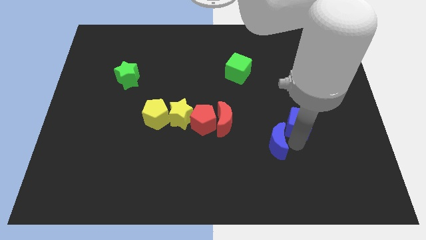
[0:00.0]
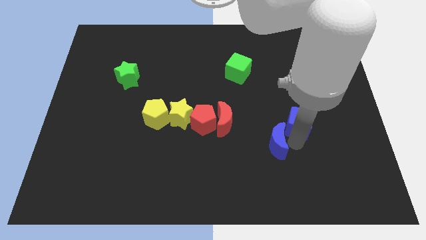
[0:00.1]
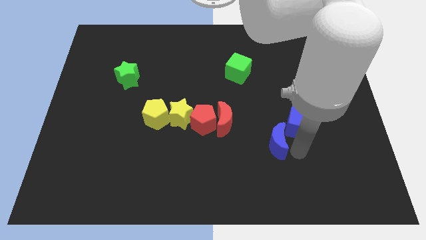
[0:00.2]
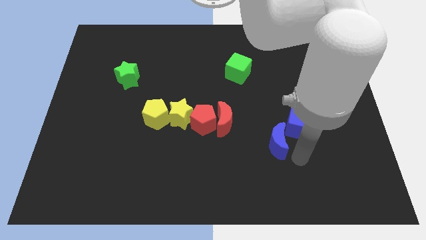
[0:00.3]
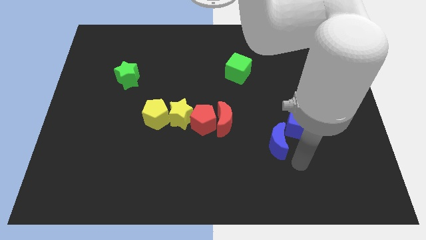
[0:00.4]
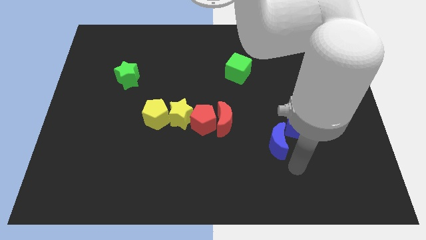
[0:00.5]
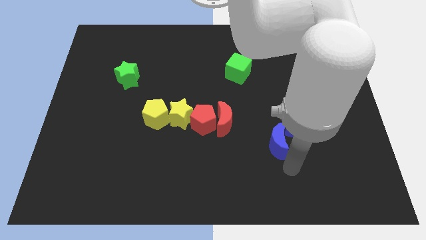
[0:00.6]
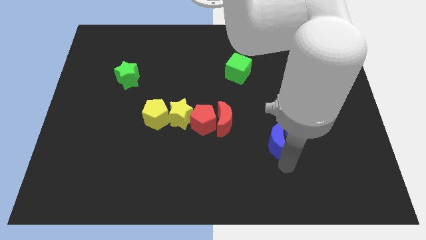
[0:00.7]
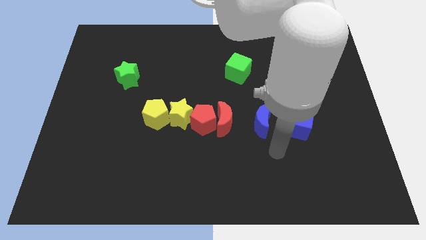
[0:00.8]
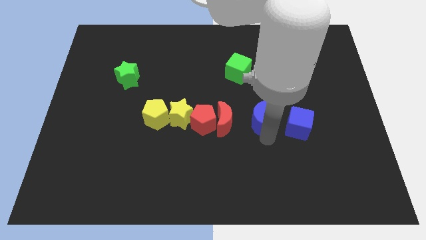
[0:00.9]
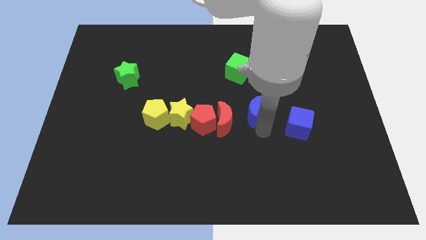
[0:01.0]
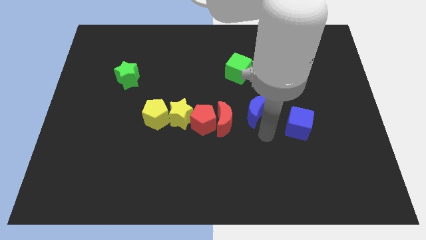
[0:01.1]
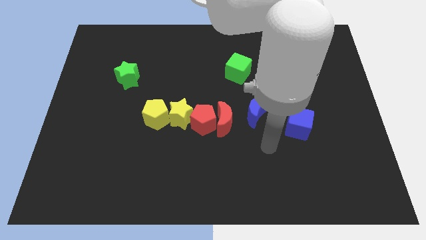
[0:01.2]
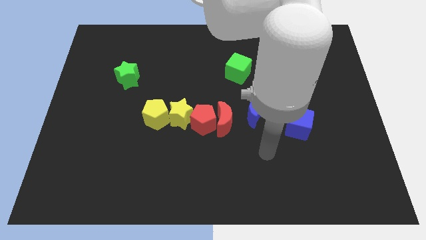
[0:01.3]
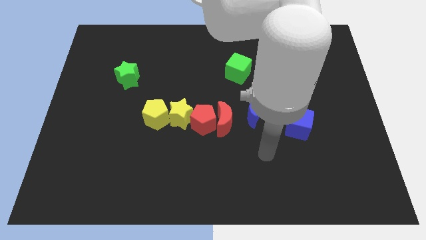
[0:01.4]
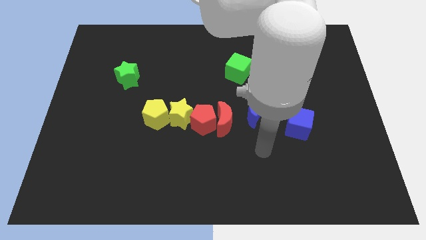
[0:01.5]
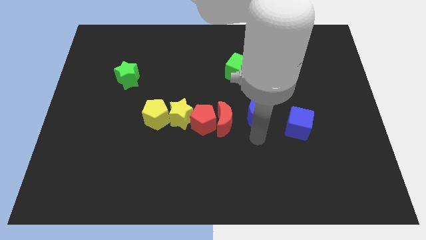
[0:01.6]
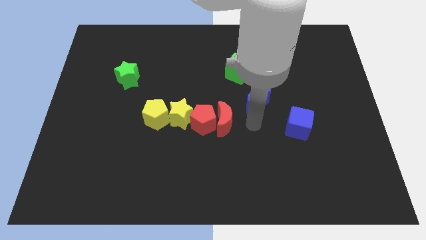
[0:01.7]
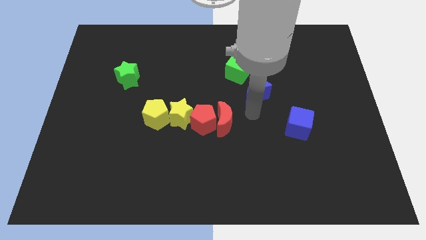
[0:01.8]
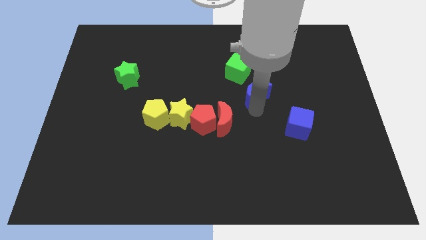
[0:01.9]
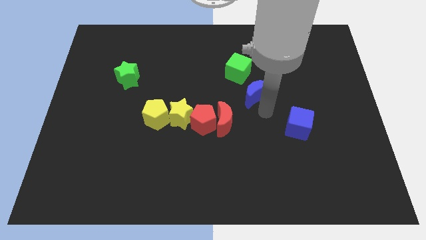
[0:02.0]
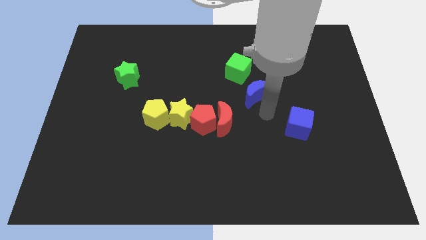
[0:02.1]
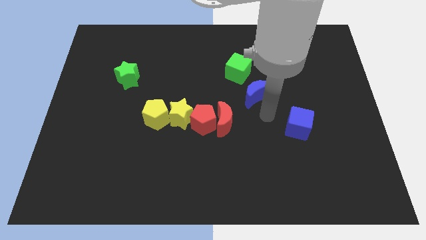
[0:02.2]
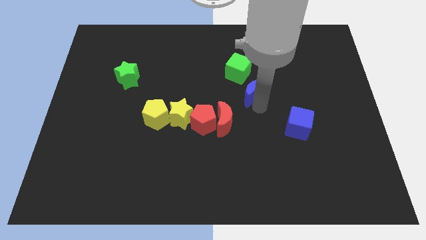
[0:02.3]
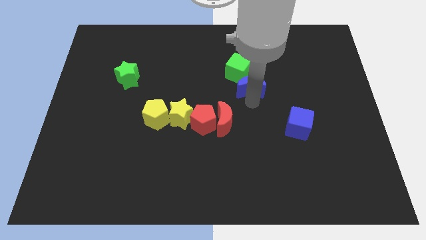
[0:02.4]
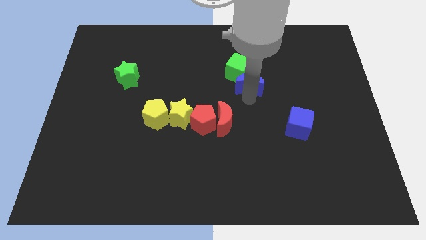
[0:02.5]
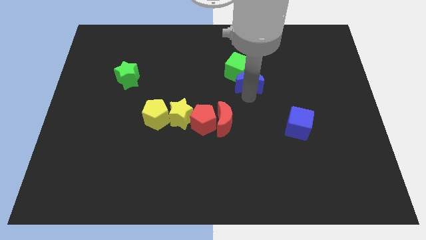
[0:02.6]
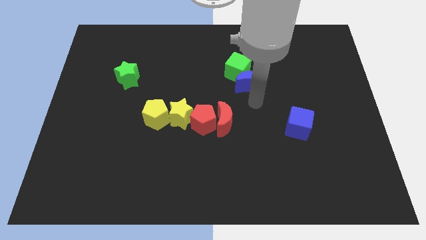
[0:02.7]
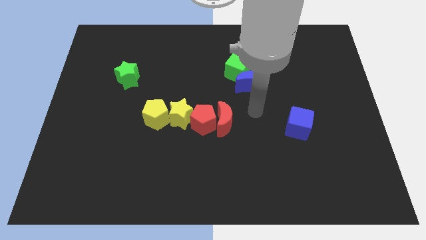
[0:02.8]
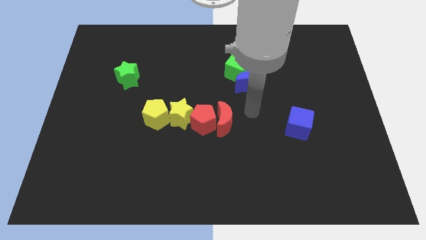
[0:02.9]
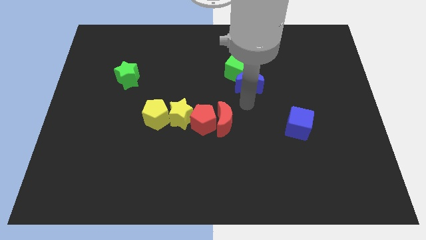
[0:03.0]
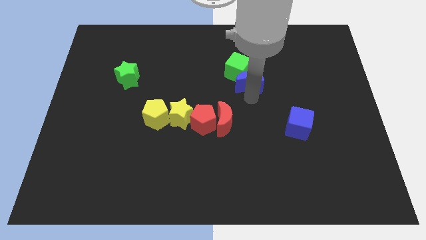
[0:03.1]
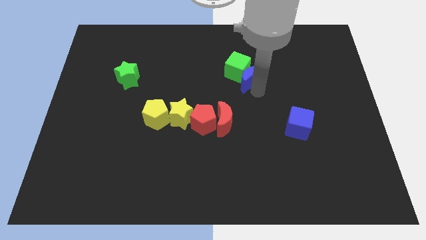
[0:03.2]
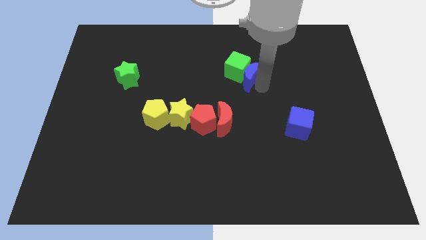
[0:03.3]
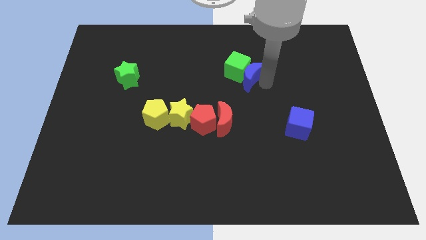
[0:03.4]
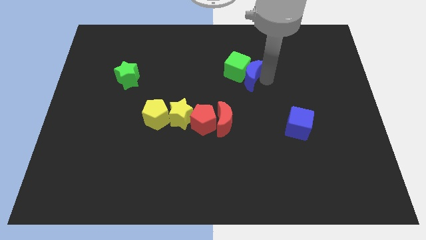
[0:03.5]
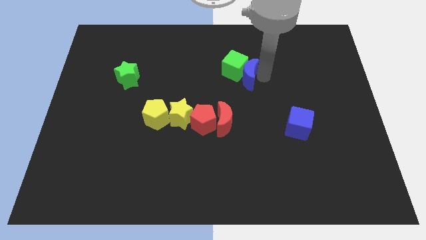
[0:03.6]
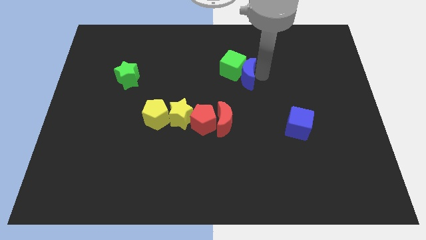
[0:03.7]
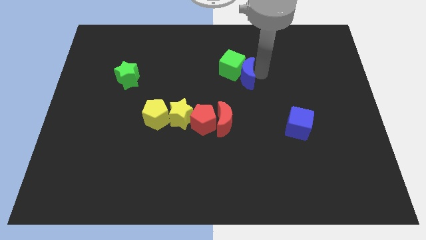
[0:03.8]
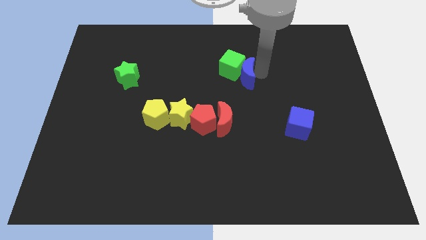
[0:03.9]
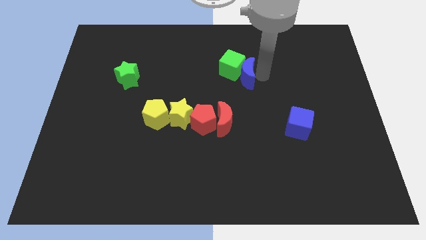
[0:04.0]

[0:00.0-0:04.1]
place the blue crescent into the green cube

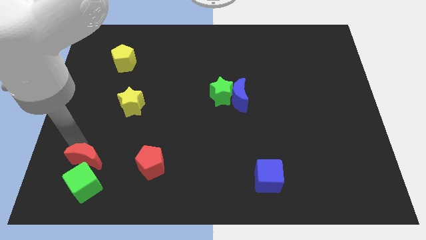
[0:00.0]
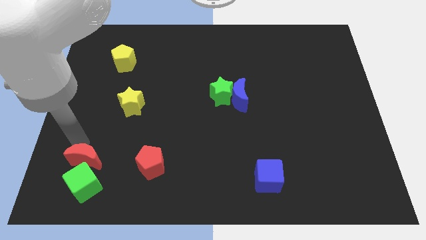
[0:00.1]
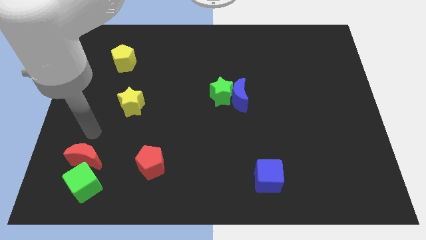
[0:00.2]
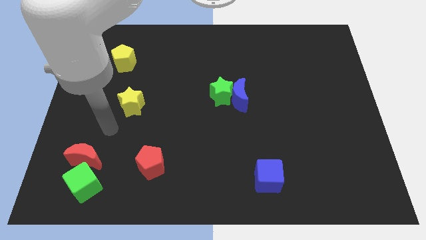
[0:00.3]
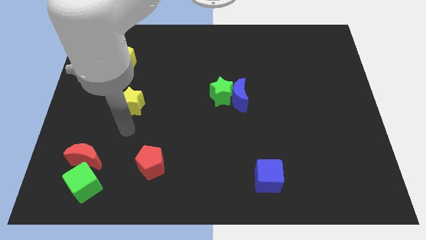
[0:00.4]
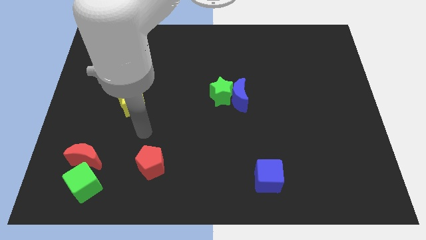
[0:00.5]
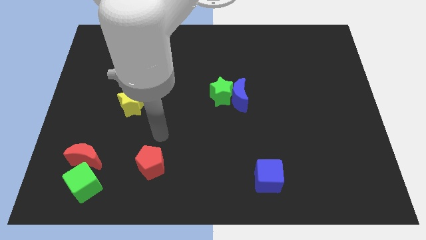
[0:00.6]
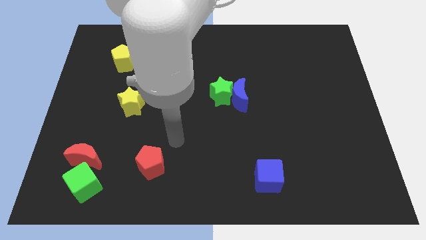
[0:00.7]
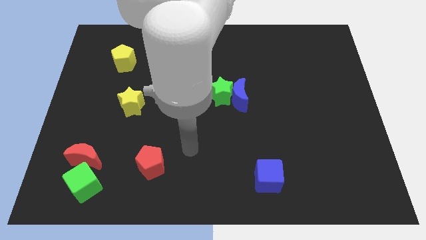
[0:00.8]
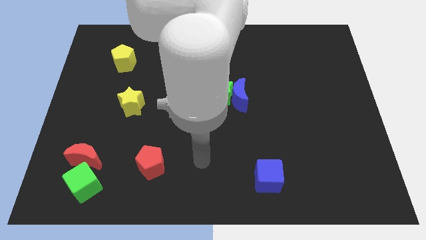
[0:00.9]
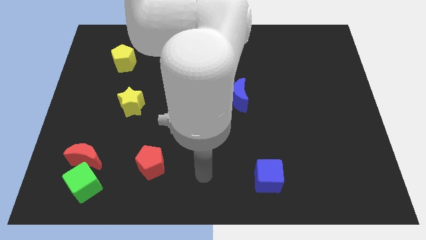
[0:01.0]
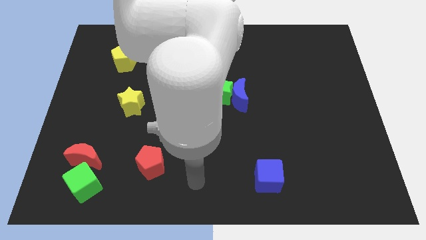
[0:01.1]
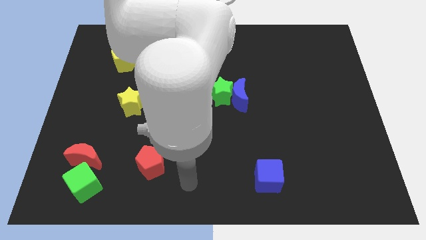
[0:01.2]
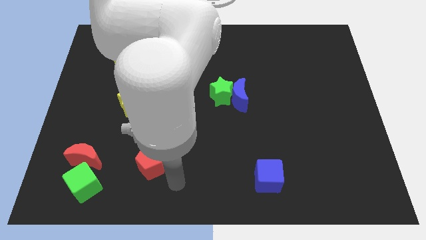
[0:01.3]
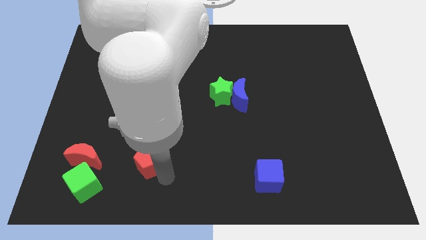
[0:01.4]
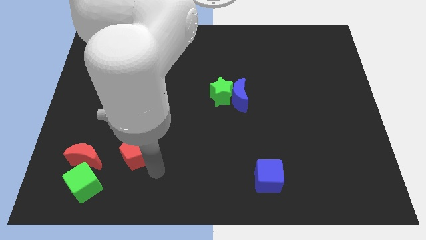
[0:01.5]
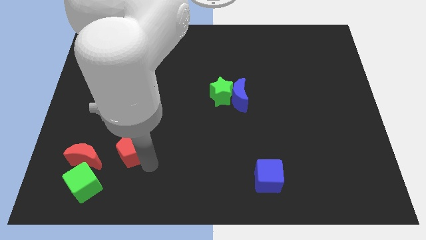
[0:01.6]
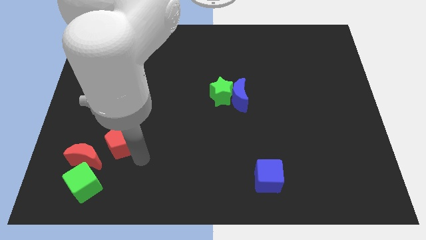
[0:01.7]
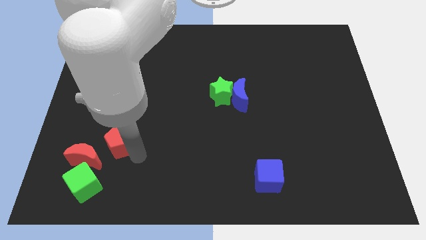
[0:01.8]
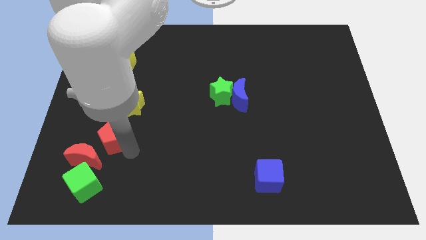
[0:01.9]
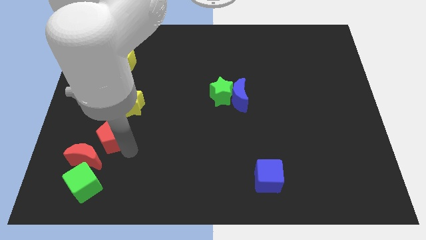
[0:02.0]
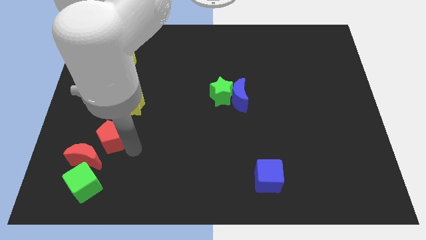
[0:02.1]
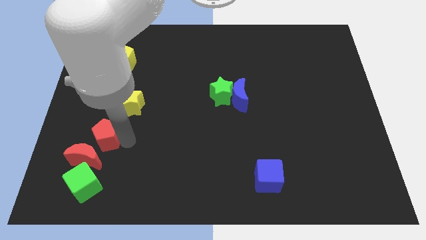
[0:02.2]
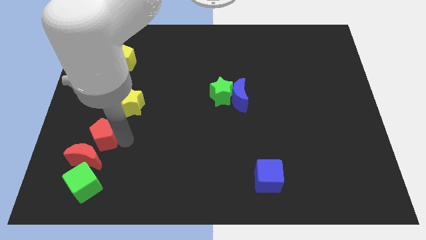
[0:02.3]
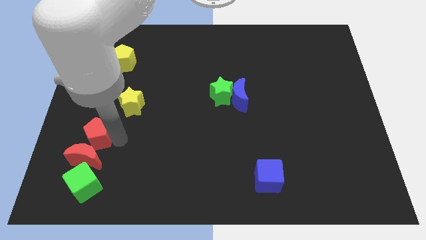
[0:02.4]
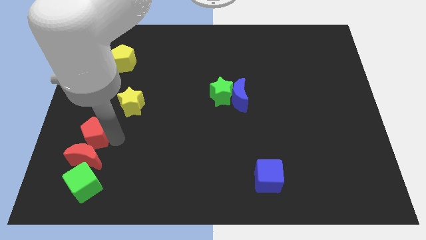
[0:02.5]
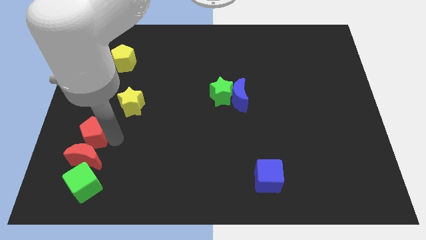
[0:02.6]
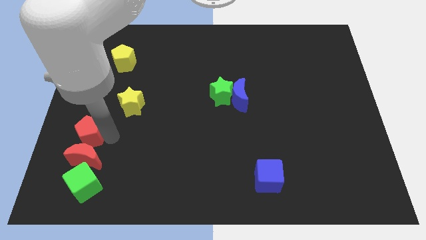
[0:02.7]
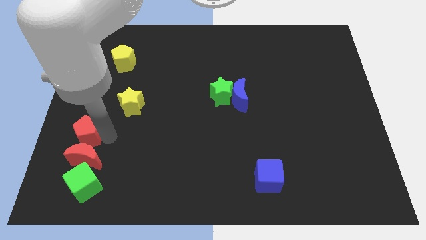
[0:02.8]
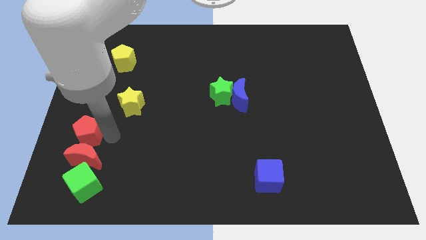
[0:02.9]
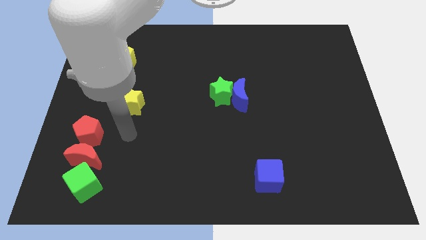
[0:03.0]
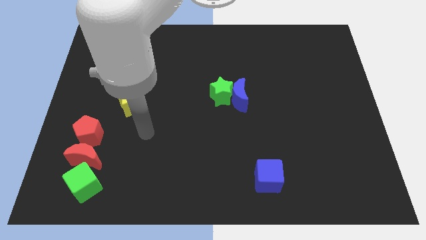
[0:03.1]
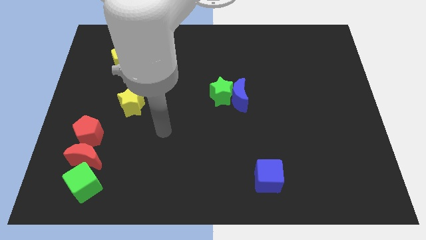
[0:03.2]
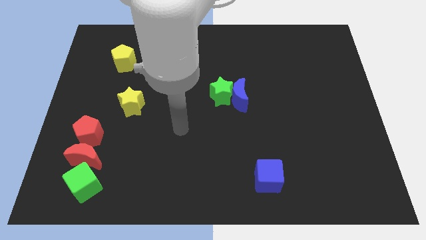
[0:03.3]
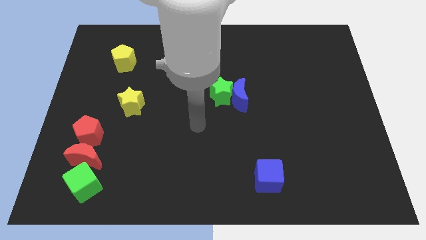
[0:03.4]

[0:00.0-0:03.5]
push the red pentagon towards the left side of the board

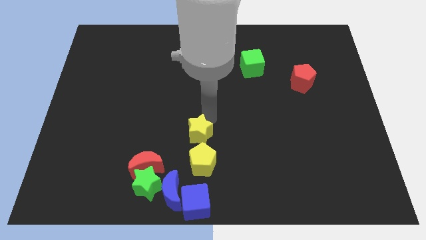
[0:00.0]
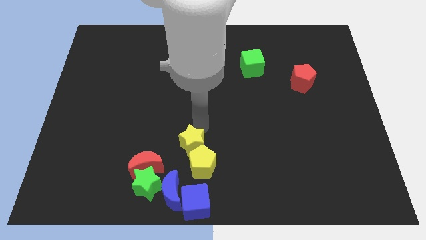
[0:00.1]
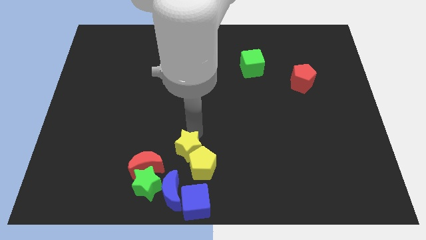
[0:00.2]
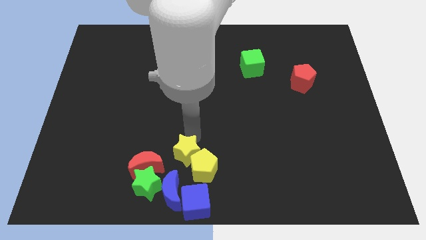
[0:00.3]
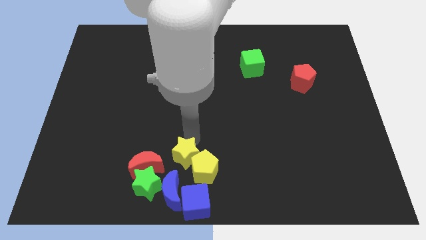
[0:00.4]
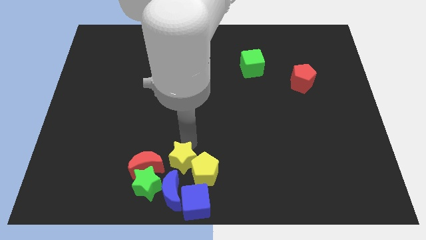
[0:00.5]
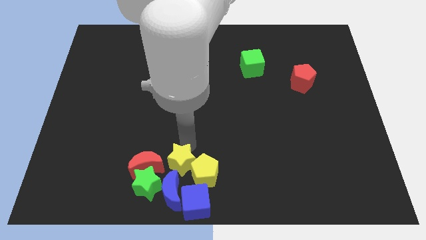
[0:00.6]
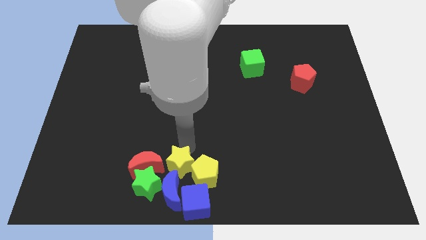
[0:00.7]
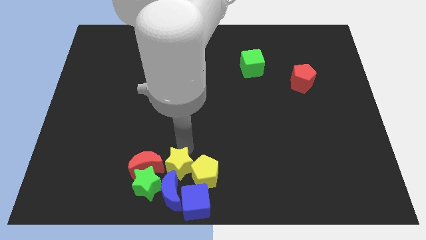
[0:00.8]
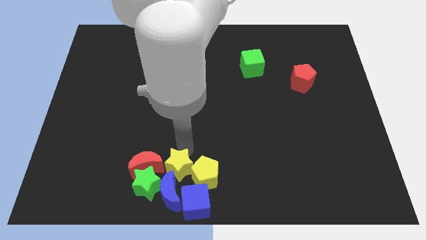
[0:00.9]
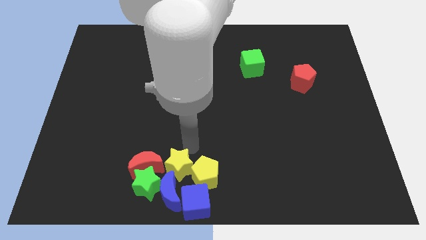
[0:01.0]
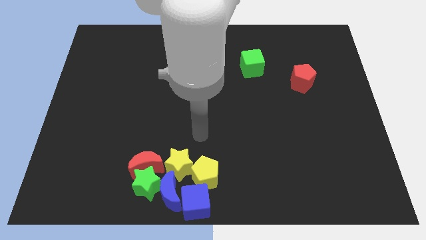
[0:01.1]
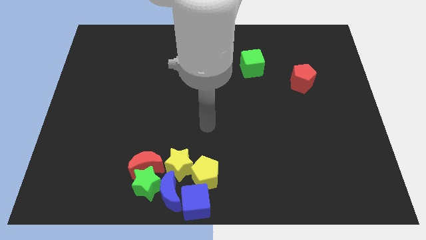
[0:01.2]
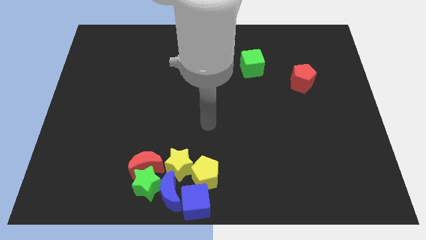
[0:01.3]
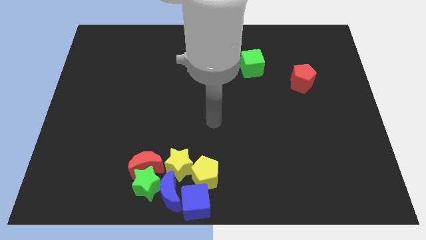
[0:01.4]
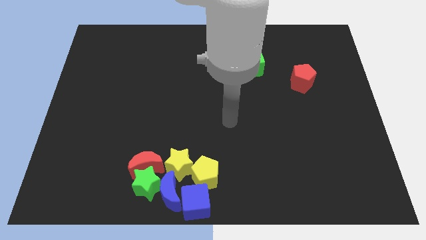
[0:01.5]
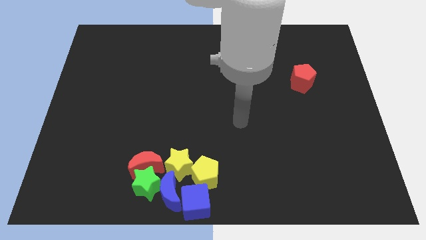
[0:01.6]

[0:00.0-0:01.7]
push both the yellow blocks to the group of blocks on the board
